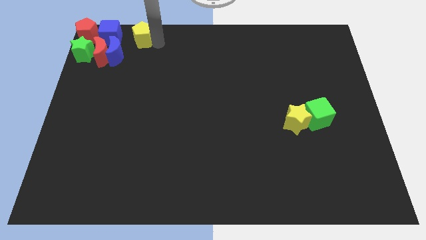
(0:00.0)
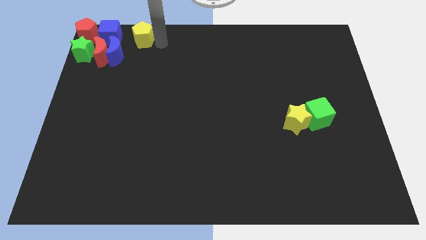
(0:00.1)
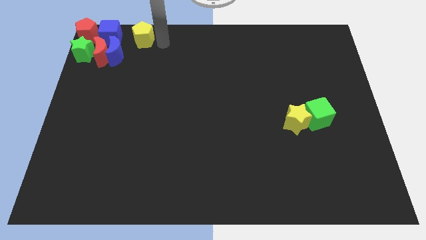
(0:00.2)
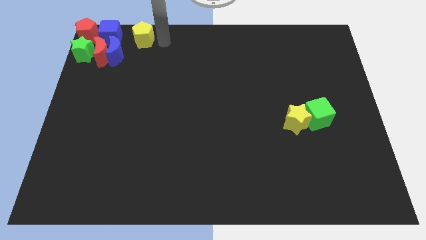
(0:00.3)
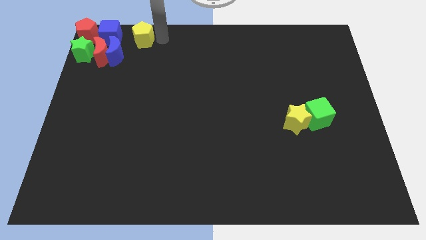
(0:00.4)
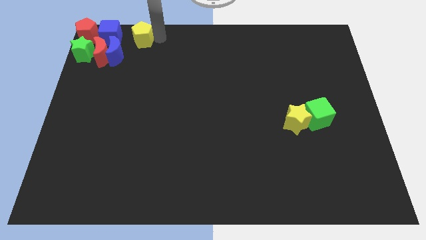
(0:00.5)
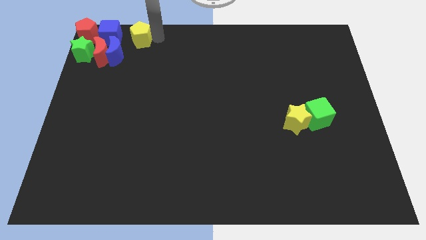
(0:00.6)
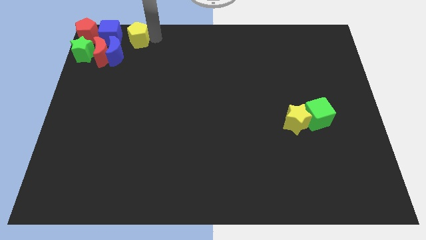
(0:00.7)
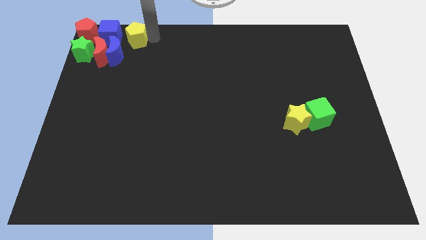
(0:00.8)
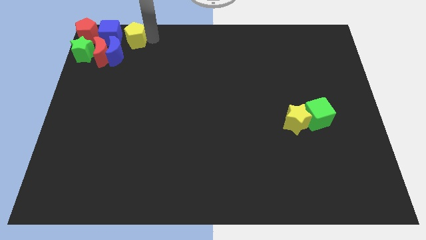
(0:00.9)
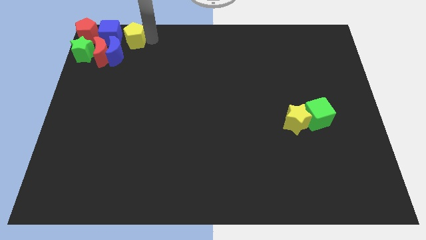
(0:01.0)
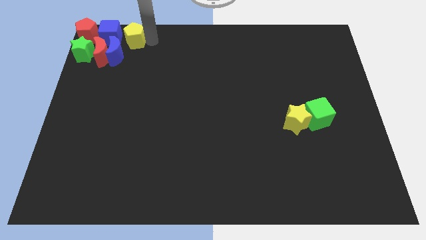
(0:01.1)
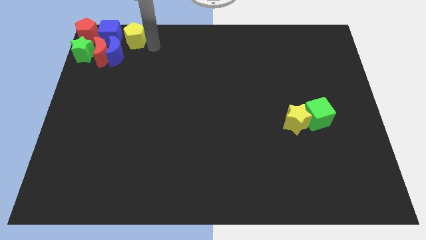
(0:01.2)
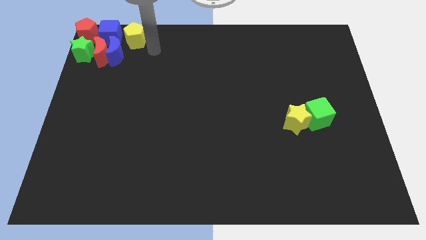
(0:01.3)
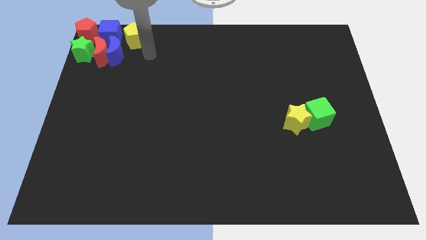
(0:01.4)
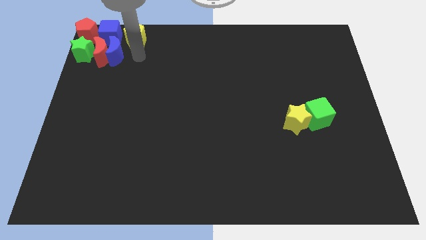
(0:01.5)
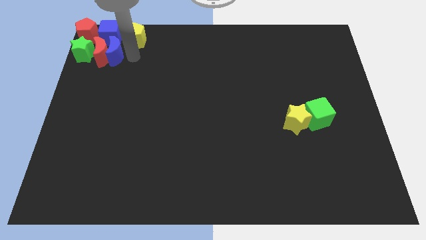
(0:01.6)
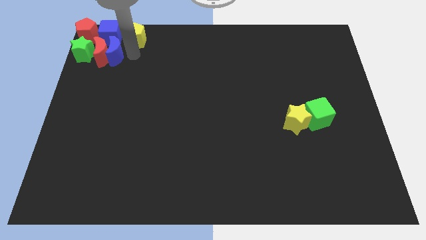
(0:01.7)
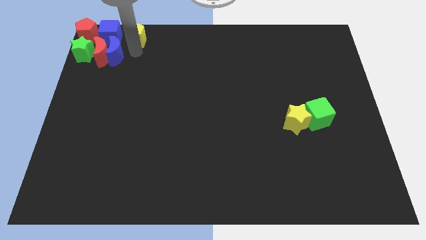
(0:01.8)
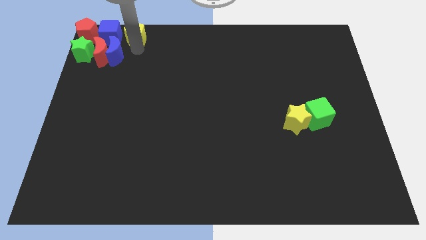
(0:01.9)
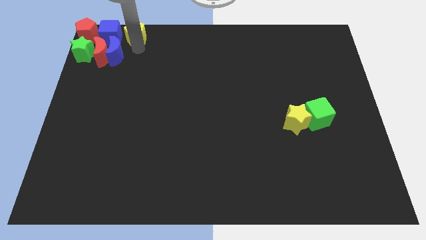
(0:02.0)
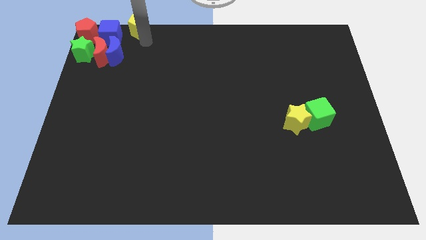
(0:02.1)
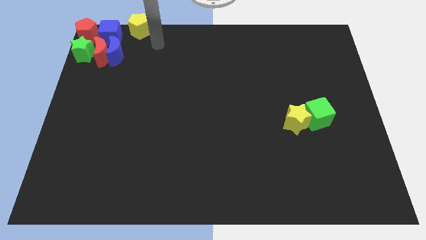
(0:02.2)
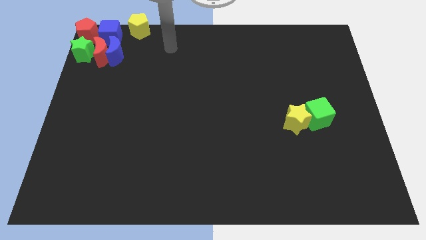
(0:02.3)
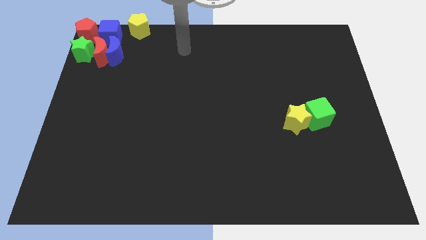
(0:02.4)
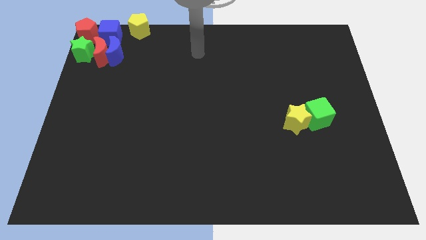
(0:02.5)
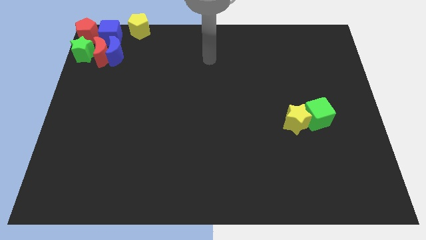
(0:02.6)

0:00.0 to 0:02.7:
push yellow pentagon into the group of blocks

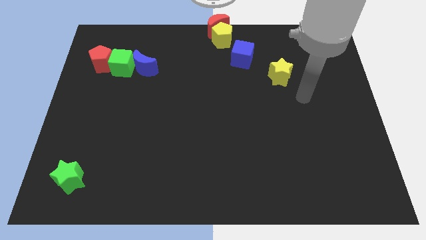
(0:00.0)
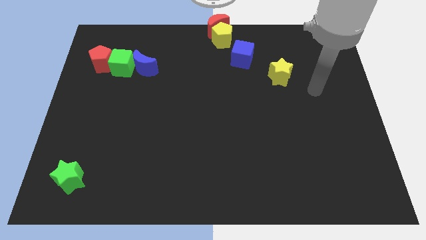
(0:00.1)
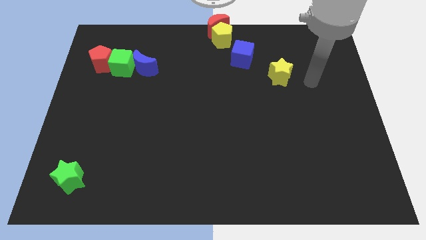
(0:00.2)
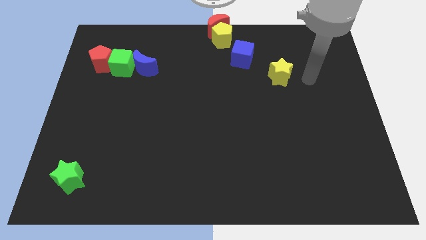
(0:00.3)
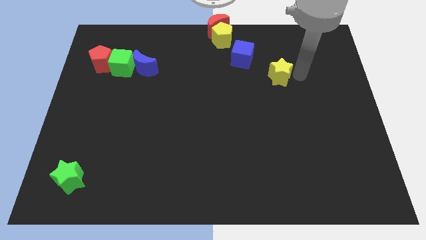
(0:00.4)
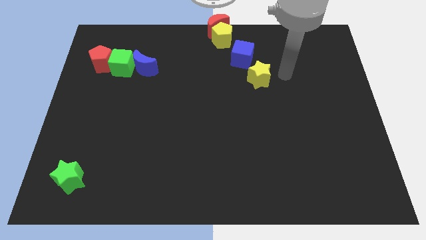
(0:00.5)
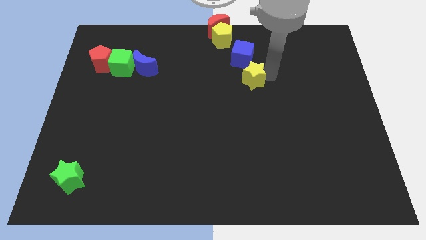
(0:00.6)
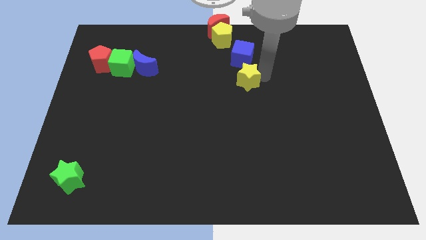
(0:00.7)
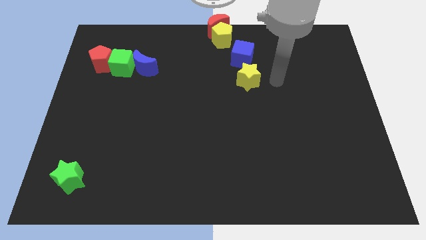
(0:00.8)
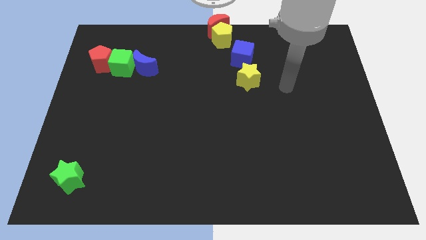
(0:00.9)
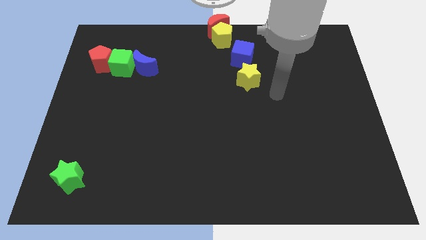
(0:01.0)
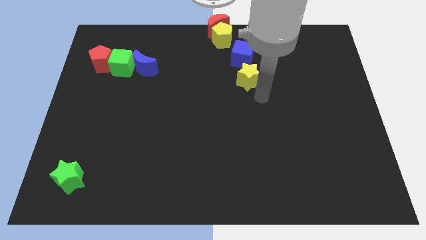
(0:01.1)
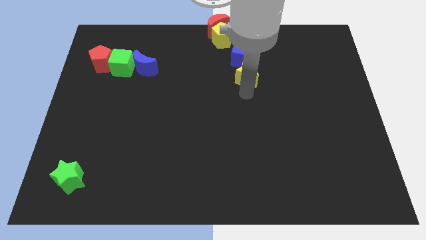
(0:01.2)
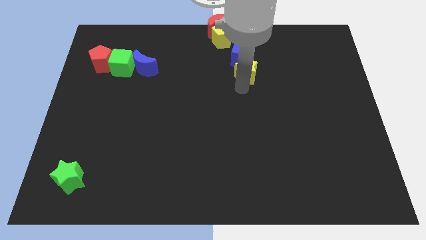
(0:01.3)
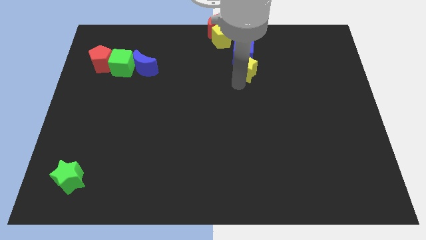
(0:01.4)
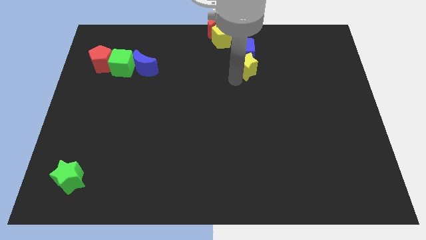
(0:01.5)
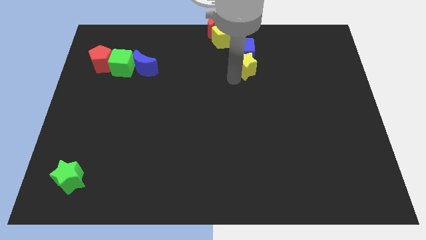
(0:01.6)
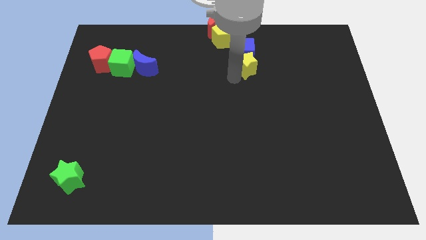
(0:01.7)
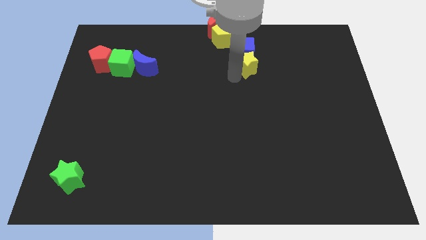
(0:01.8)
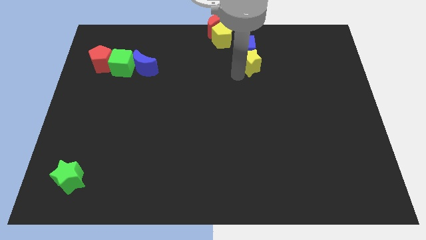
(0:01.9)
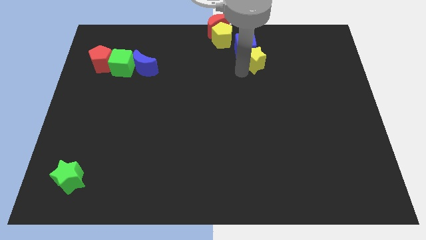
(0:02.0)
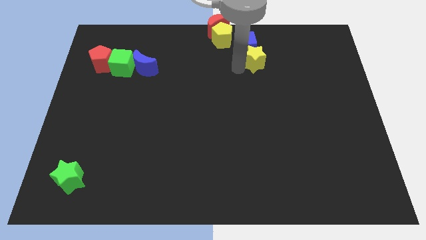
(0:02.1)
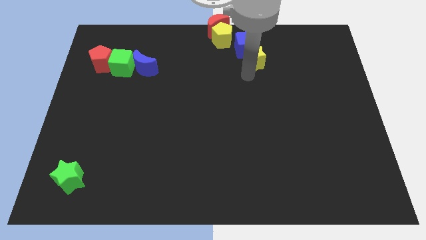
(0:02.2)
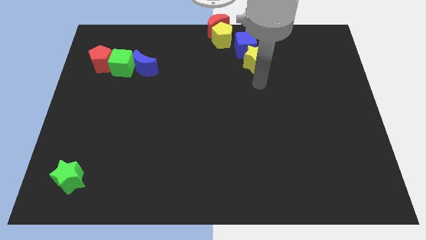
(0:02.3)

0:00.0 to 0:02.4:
move yellow star below the blue cube

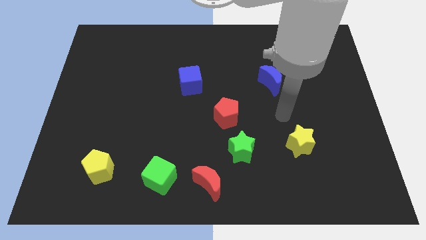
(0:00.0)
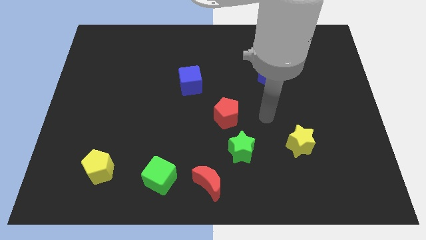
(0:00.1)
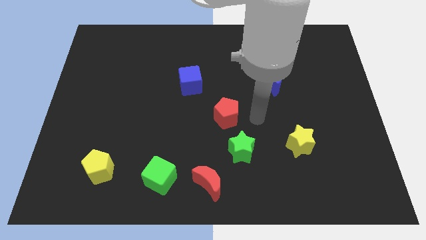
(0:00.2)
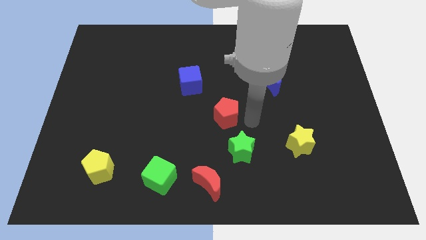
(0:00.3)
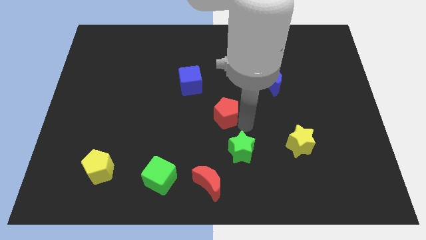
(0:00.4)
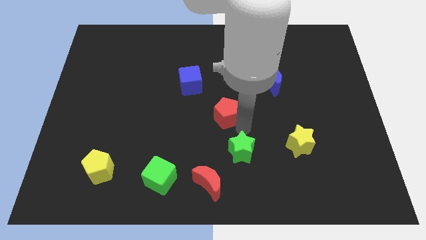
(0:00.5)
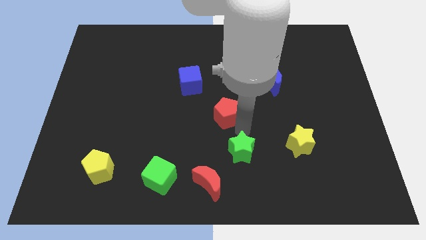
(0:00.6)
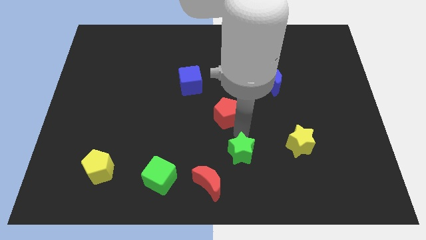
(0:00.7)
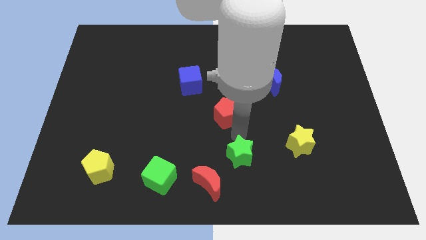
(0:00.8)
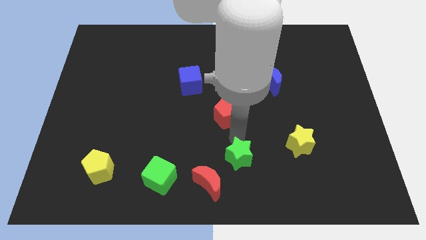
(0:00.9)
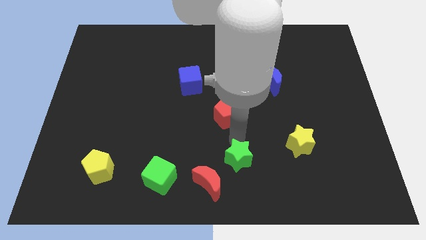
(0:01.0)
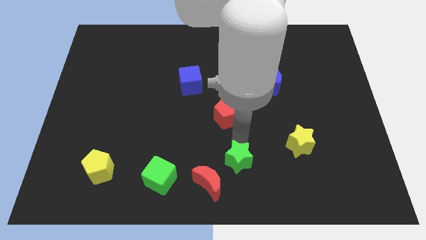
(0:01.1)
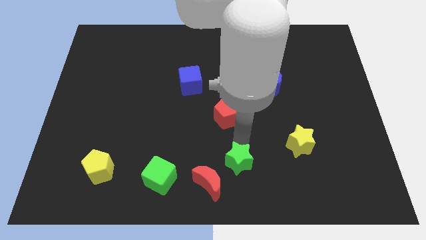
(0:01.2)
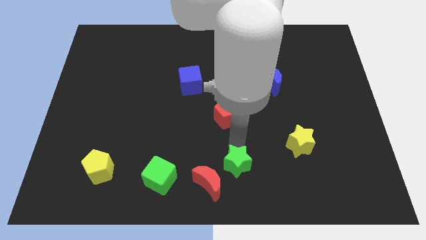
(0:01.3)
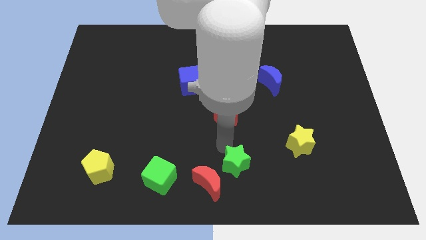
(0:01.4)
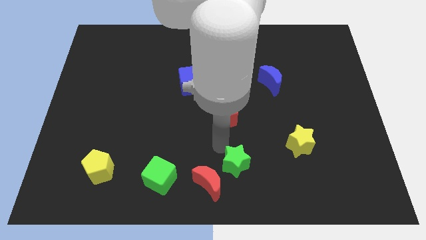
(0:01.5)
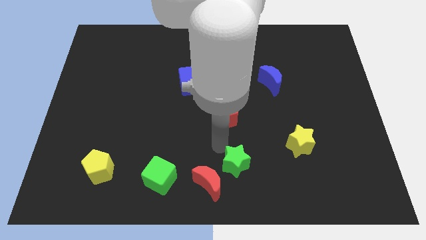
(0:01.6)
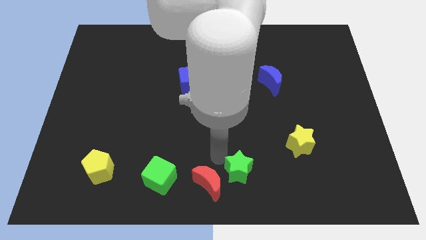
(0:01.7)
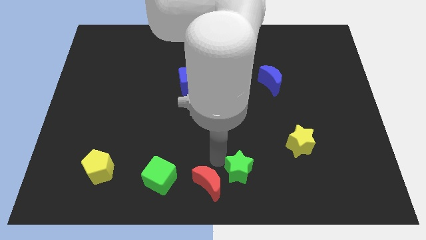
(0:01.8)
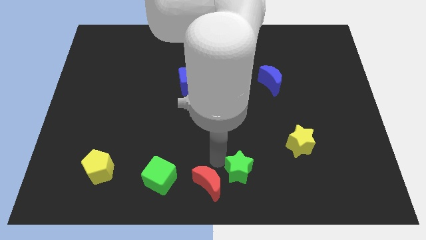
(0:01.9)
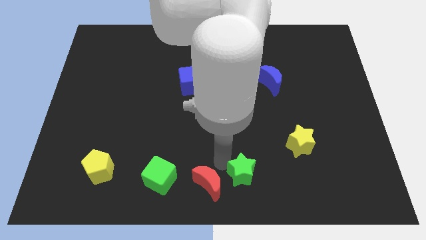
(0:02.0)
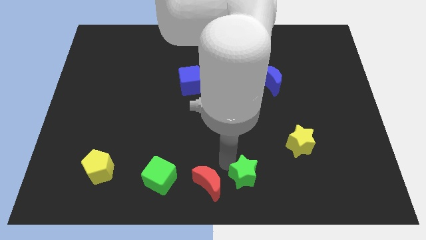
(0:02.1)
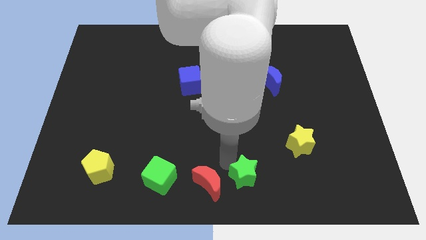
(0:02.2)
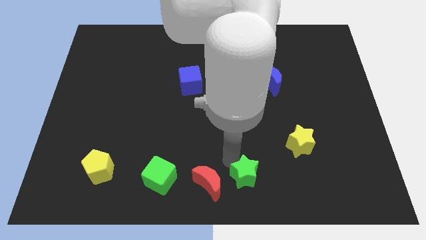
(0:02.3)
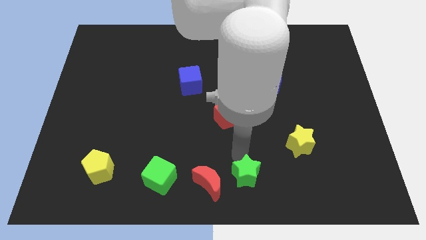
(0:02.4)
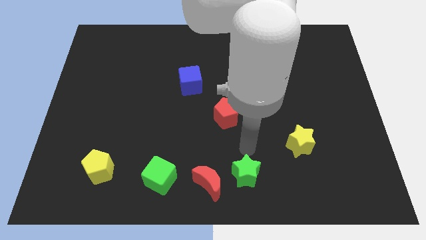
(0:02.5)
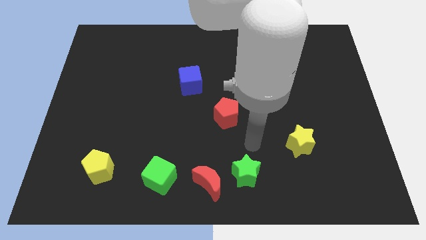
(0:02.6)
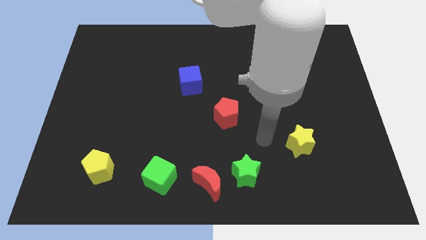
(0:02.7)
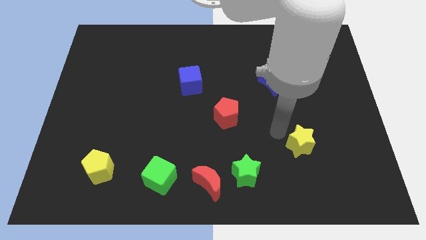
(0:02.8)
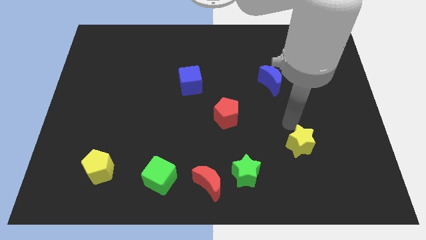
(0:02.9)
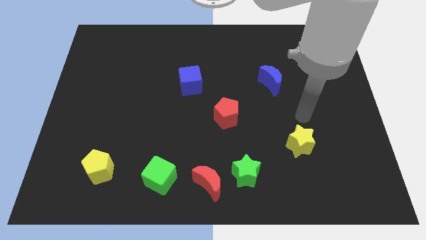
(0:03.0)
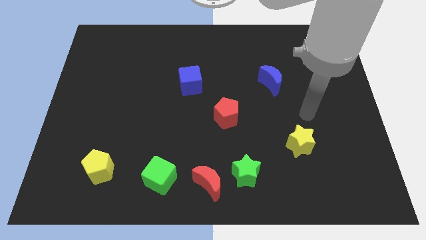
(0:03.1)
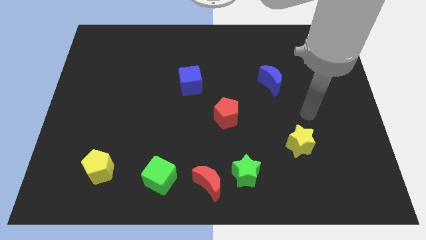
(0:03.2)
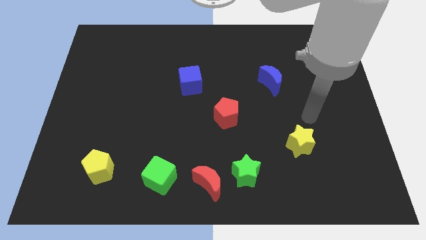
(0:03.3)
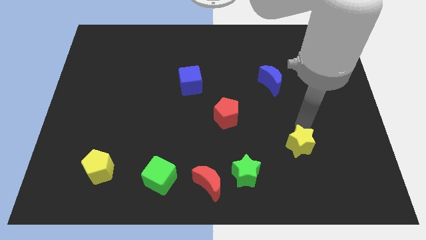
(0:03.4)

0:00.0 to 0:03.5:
move the green star towards the bottom center

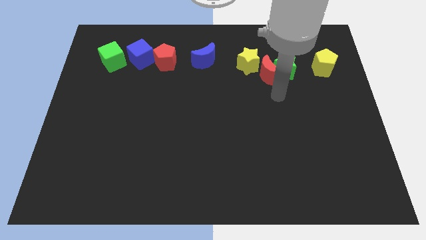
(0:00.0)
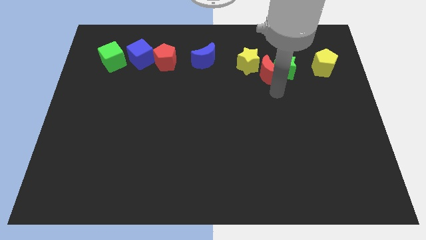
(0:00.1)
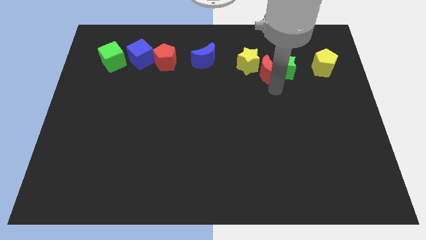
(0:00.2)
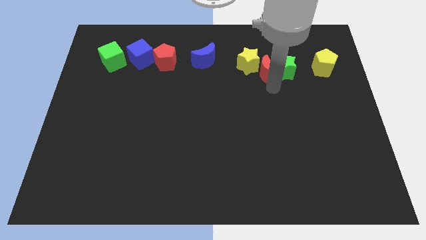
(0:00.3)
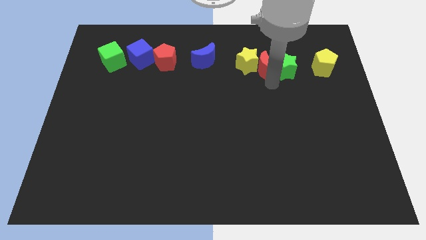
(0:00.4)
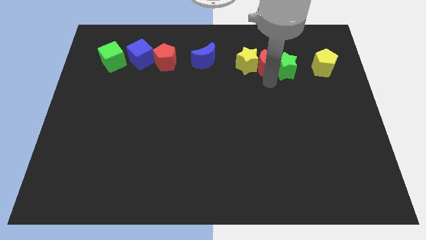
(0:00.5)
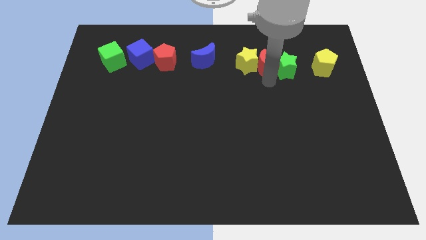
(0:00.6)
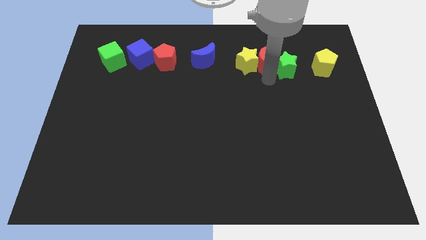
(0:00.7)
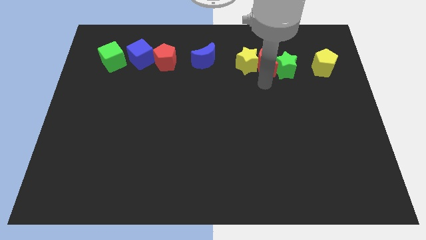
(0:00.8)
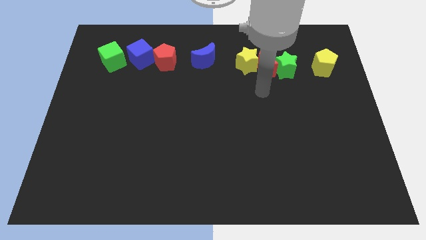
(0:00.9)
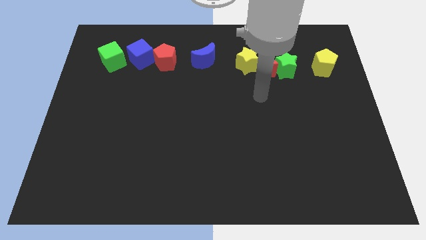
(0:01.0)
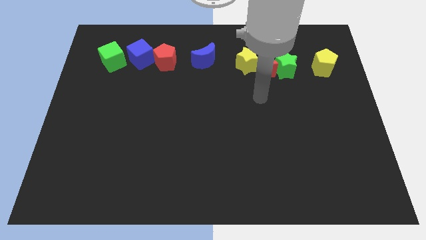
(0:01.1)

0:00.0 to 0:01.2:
push the red moon between yellow and green stars
